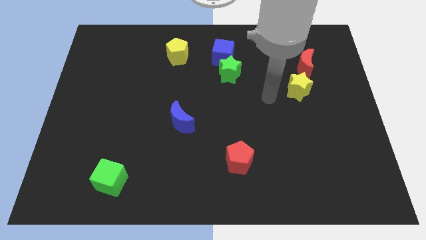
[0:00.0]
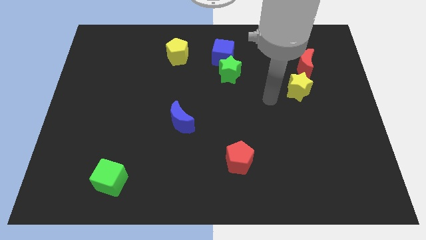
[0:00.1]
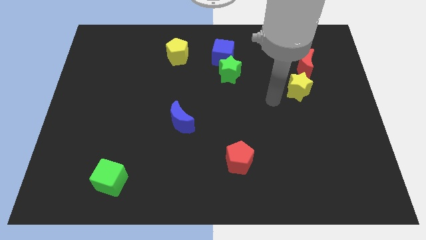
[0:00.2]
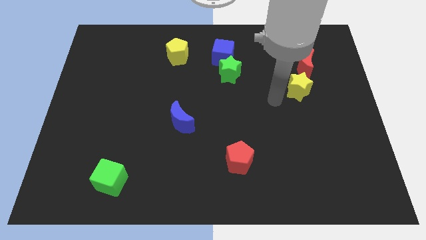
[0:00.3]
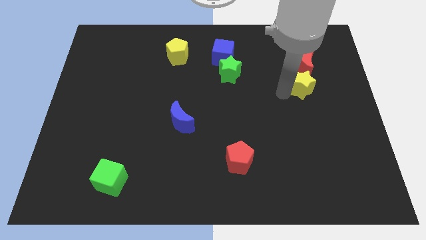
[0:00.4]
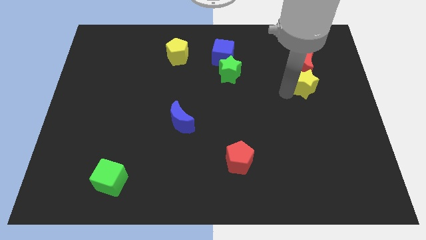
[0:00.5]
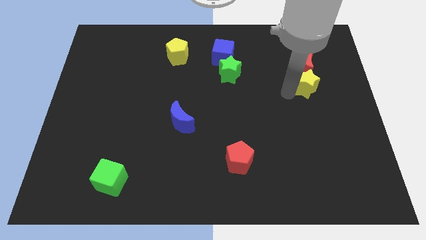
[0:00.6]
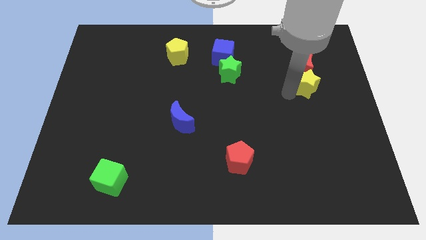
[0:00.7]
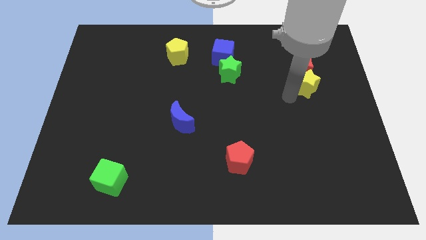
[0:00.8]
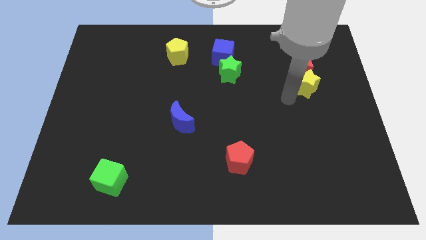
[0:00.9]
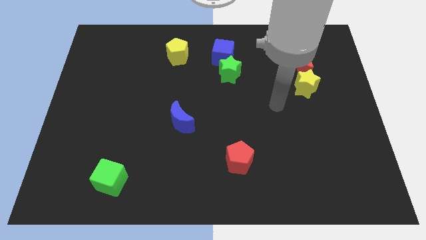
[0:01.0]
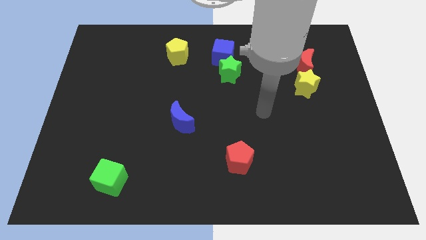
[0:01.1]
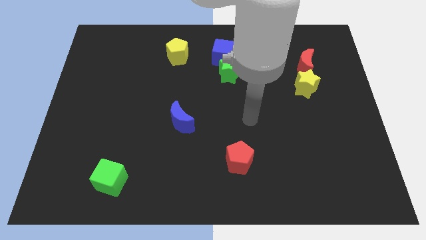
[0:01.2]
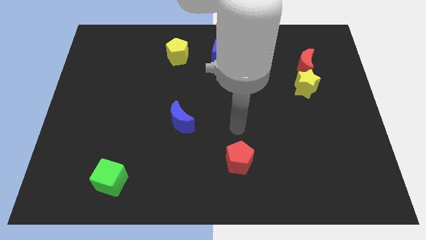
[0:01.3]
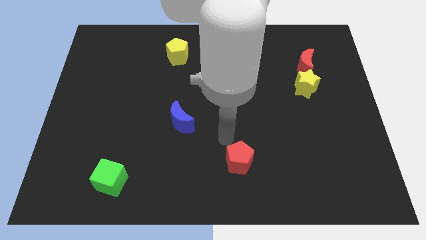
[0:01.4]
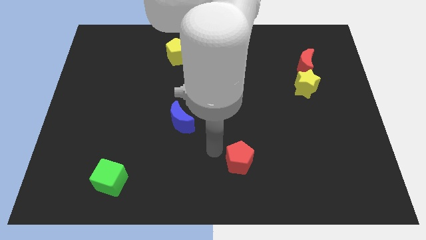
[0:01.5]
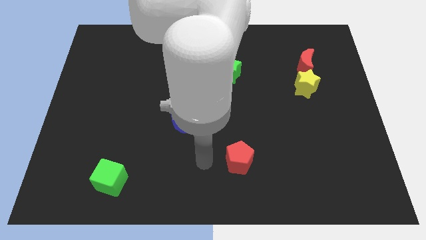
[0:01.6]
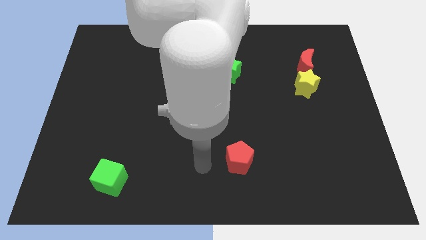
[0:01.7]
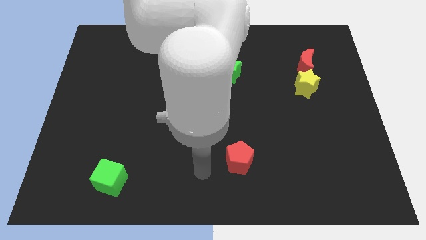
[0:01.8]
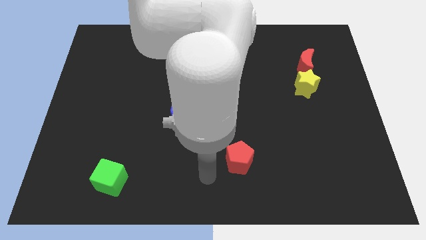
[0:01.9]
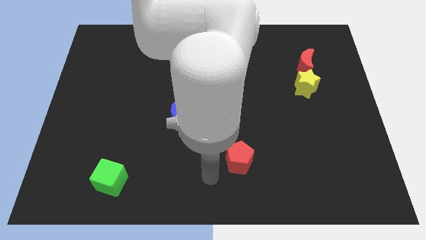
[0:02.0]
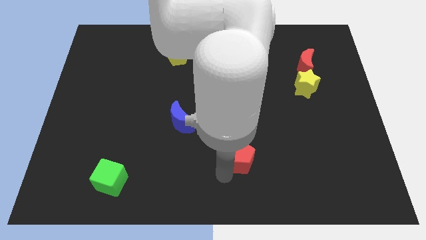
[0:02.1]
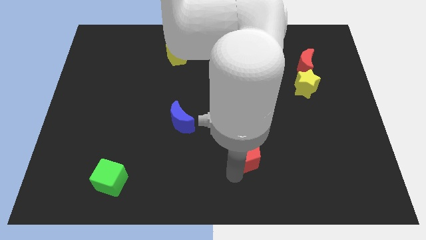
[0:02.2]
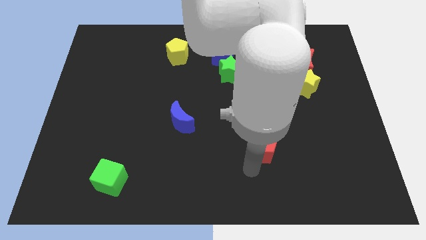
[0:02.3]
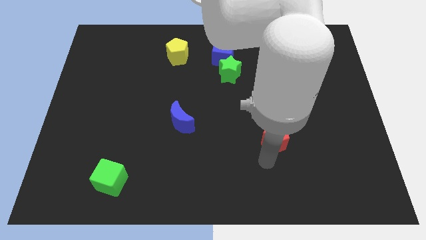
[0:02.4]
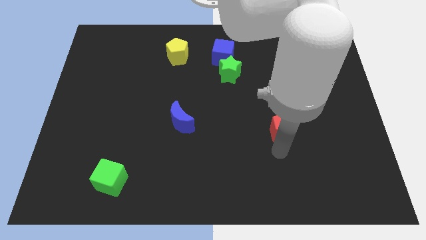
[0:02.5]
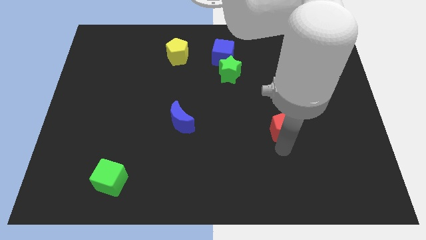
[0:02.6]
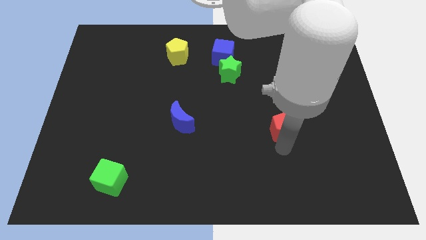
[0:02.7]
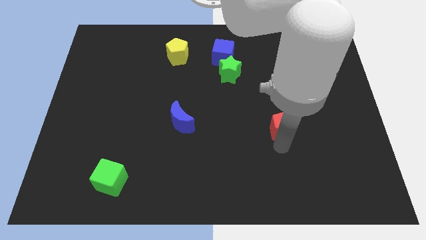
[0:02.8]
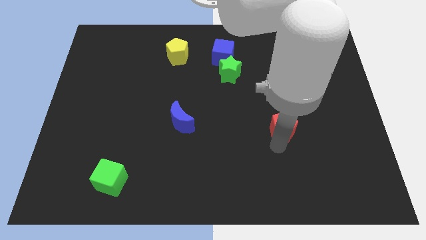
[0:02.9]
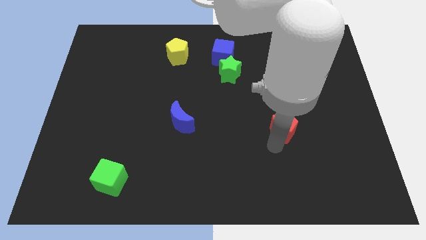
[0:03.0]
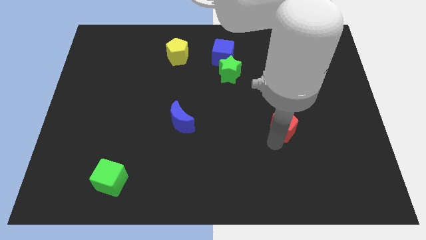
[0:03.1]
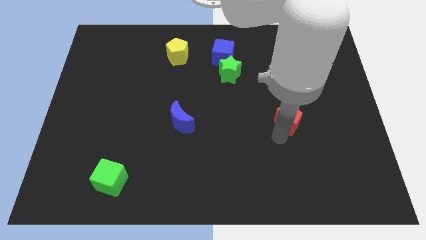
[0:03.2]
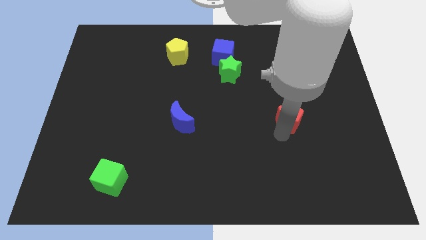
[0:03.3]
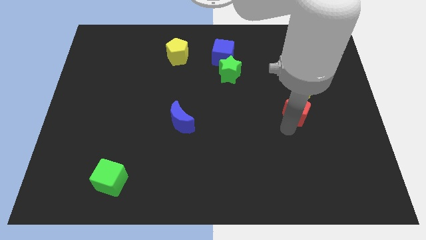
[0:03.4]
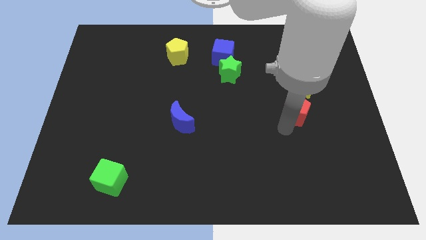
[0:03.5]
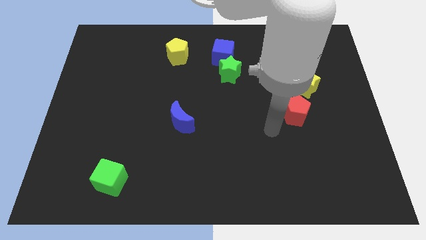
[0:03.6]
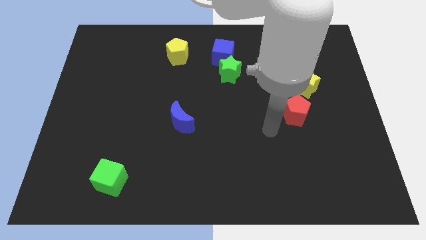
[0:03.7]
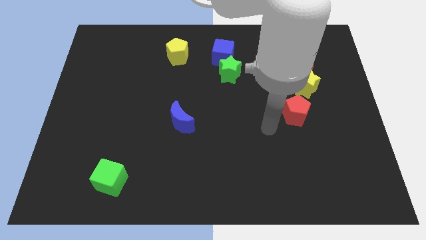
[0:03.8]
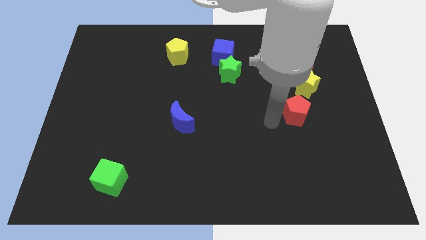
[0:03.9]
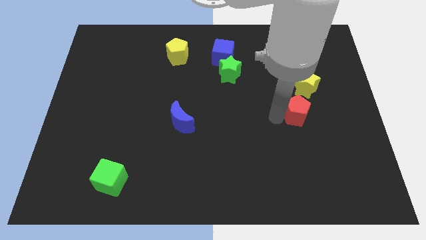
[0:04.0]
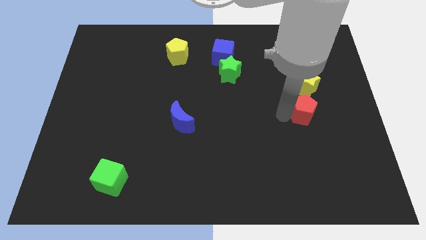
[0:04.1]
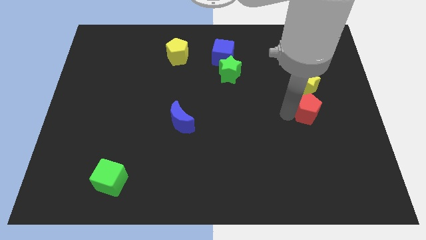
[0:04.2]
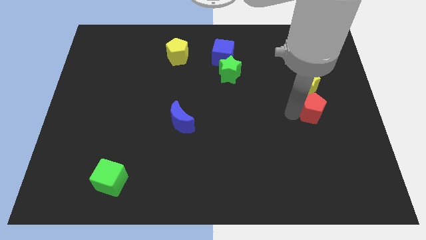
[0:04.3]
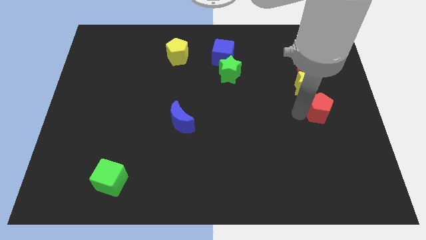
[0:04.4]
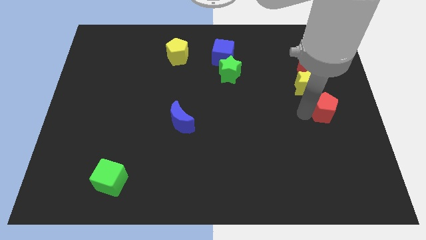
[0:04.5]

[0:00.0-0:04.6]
push the yellow star and red pentagon to the bottom side of the red moon

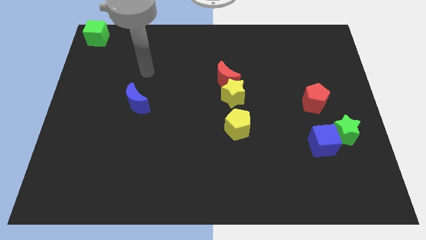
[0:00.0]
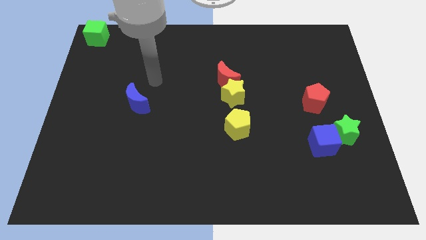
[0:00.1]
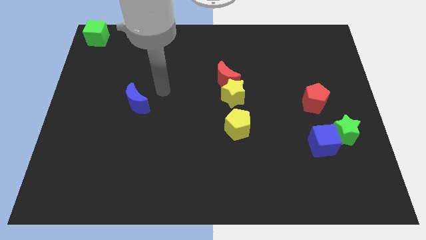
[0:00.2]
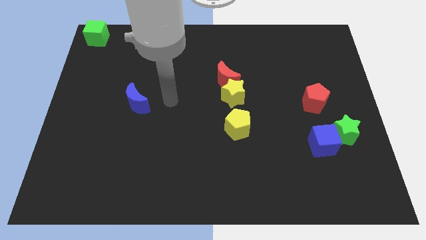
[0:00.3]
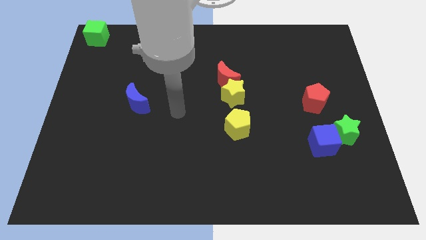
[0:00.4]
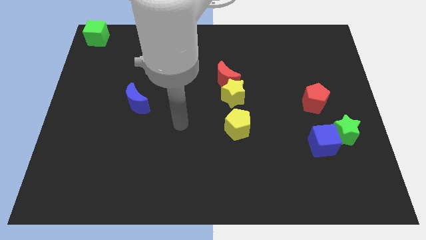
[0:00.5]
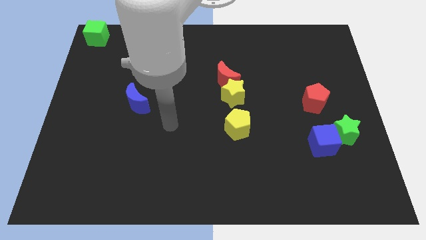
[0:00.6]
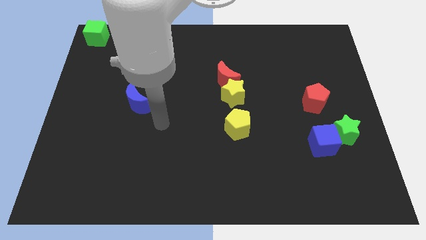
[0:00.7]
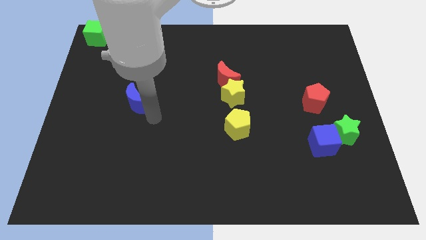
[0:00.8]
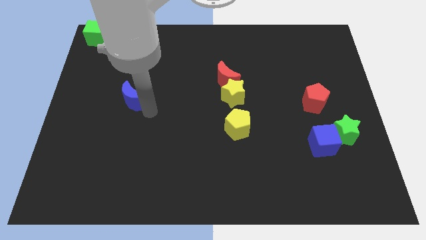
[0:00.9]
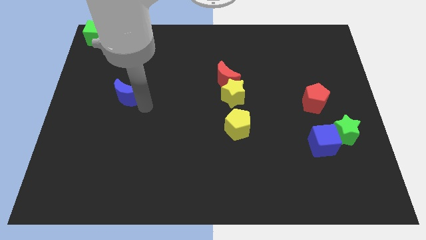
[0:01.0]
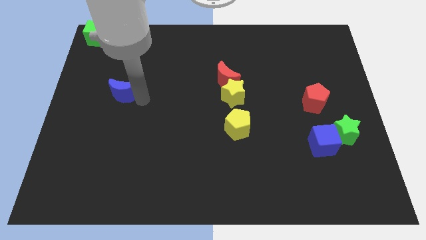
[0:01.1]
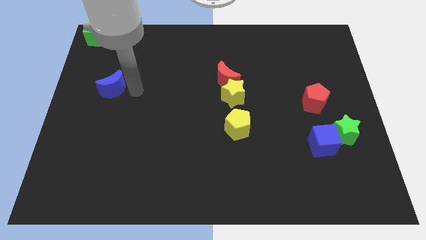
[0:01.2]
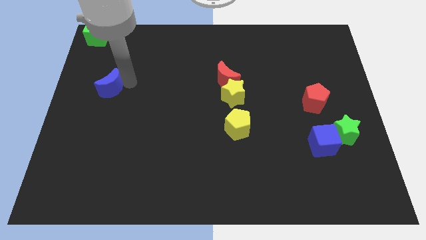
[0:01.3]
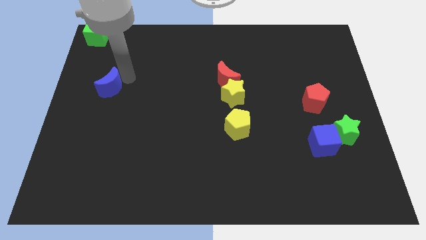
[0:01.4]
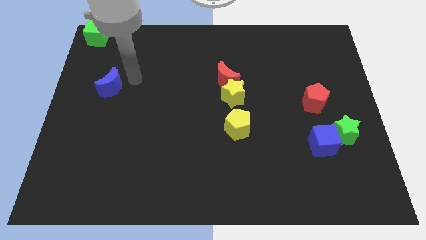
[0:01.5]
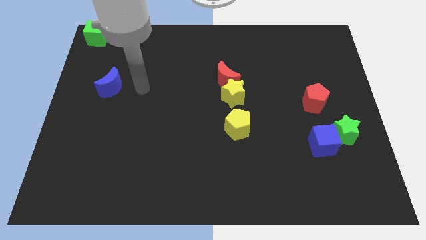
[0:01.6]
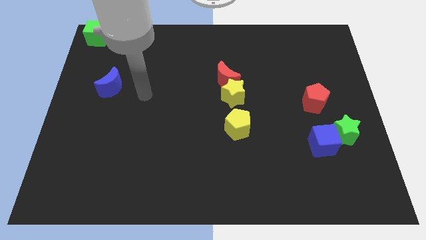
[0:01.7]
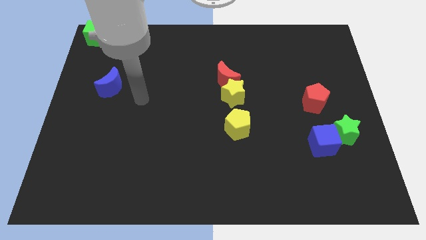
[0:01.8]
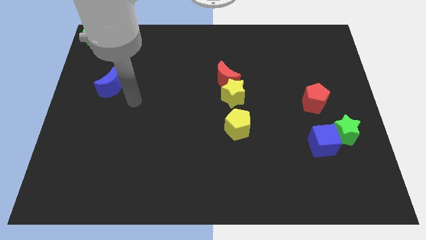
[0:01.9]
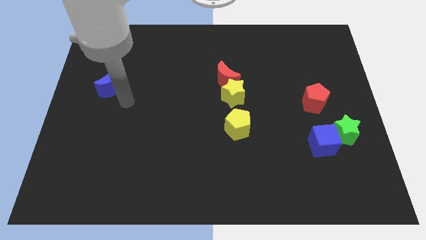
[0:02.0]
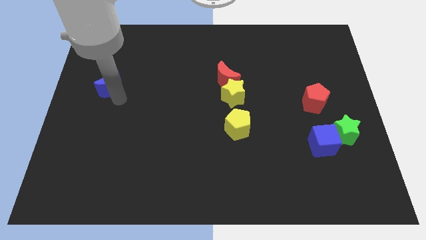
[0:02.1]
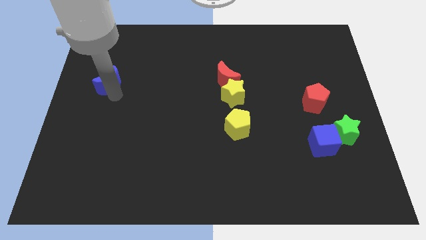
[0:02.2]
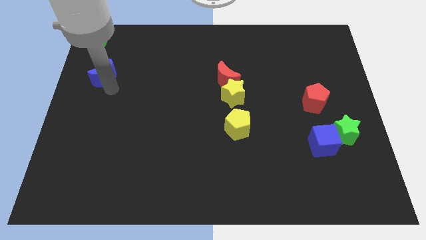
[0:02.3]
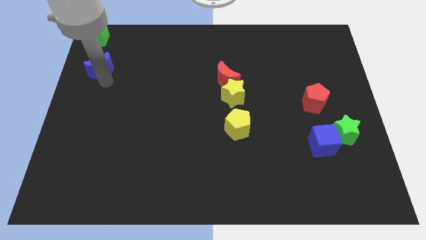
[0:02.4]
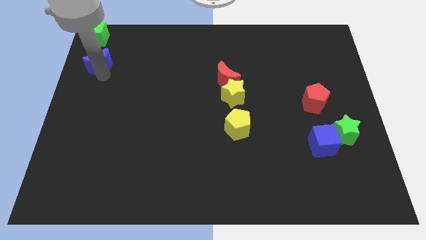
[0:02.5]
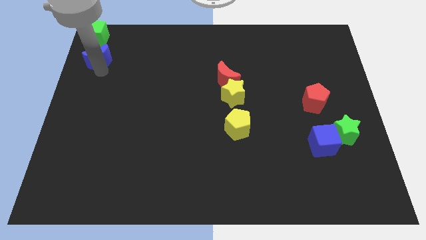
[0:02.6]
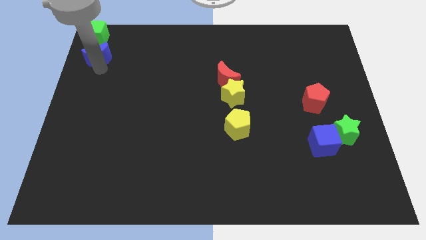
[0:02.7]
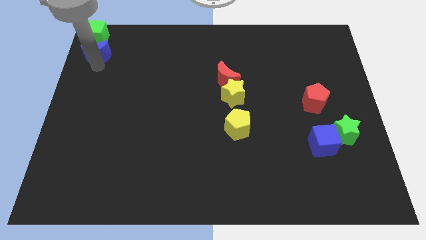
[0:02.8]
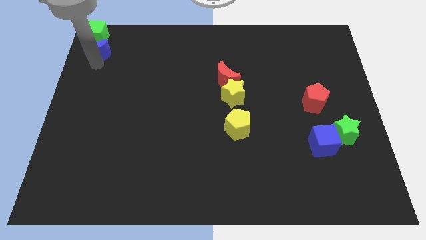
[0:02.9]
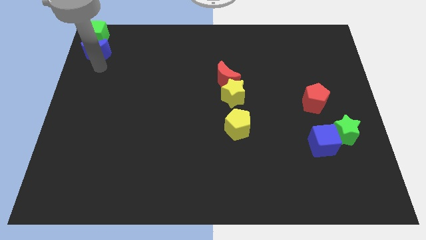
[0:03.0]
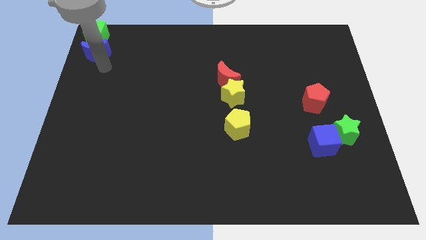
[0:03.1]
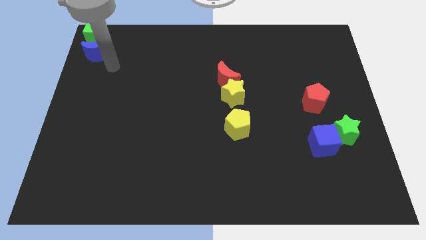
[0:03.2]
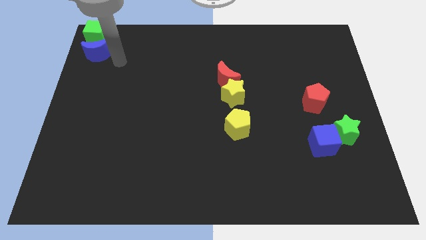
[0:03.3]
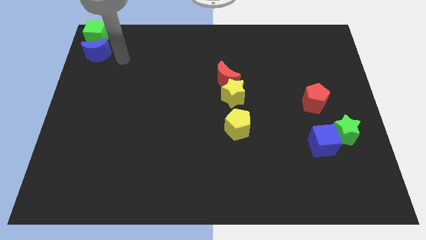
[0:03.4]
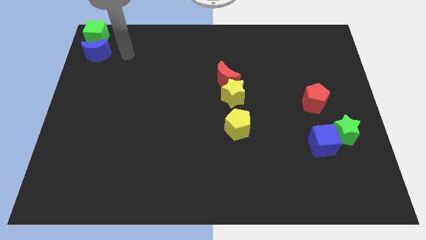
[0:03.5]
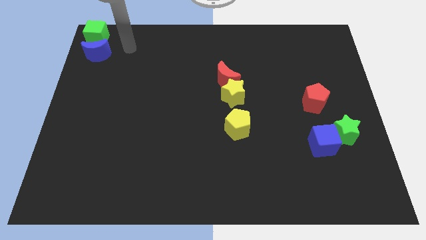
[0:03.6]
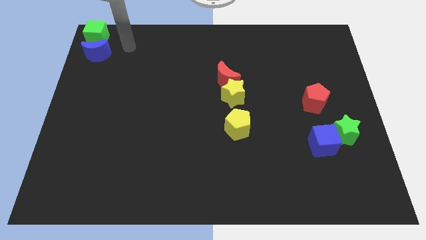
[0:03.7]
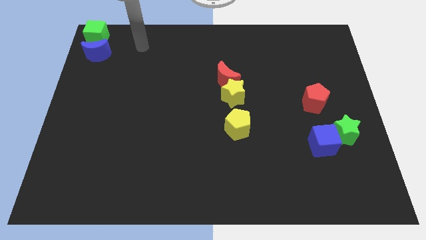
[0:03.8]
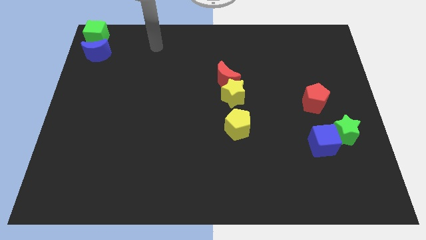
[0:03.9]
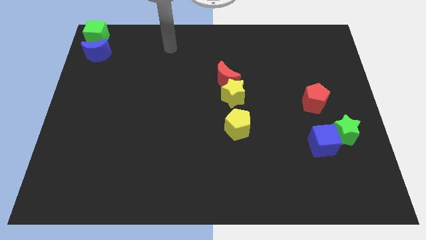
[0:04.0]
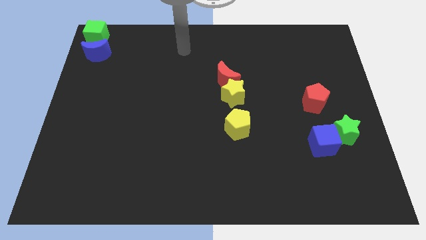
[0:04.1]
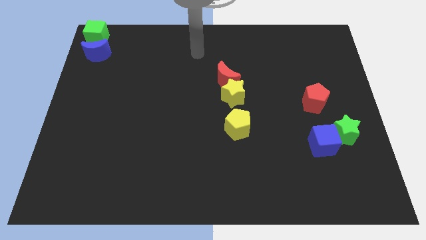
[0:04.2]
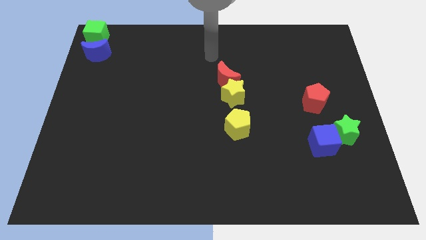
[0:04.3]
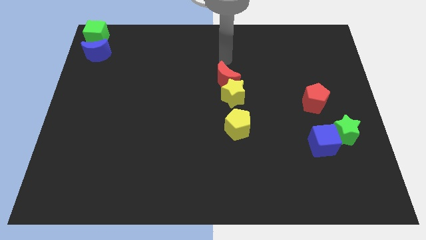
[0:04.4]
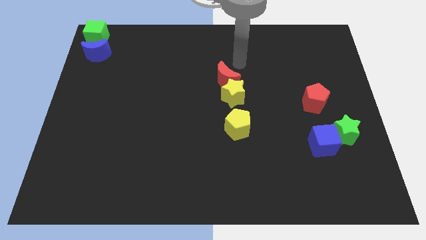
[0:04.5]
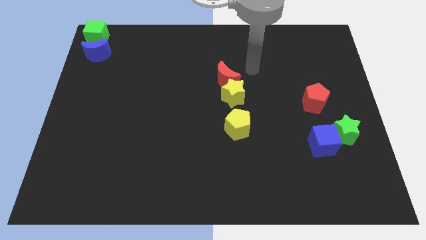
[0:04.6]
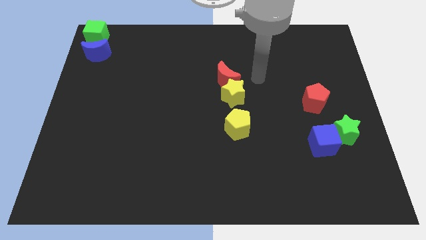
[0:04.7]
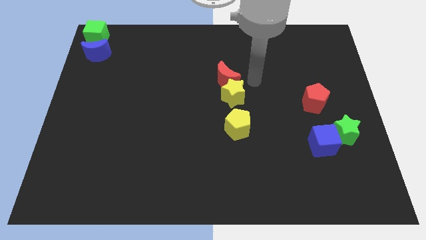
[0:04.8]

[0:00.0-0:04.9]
place the blue moon below the green cube
